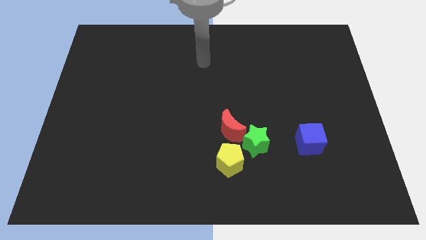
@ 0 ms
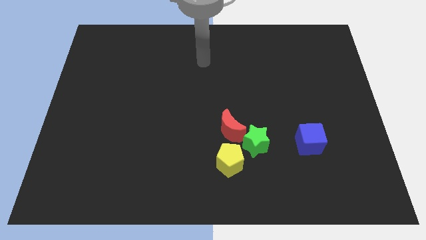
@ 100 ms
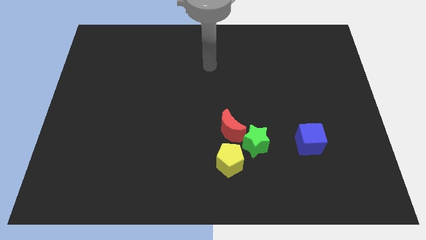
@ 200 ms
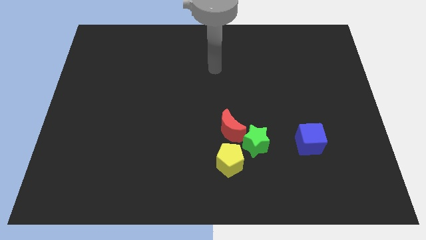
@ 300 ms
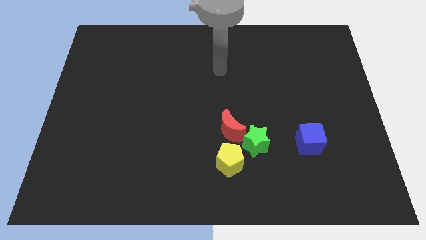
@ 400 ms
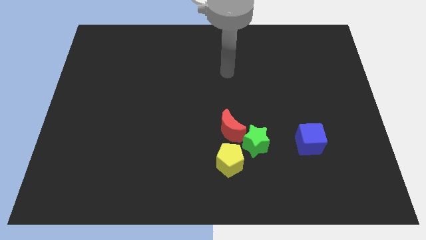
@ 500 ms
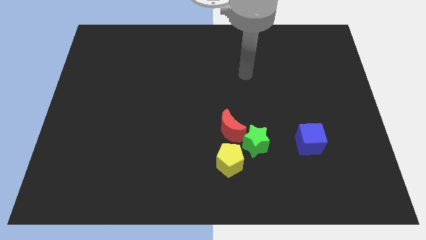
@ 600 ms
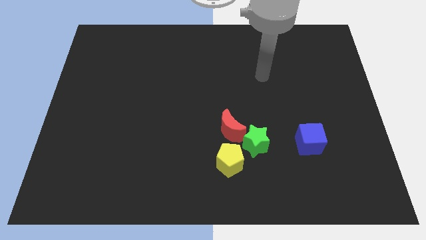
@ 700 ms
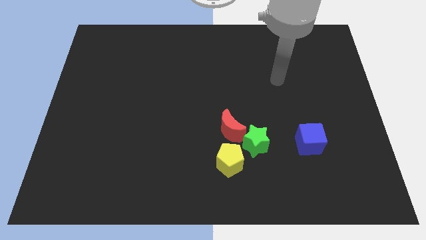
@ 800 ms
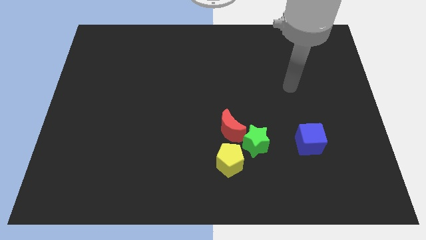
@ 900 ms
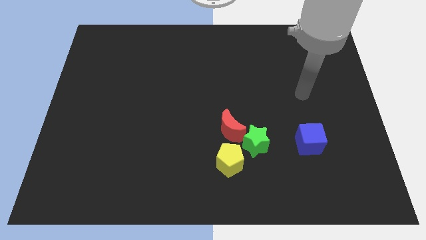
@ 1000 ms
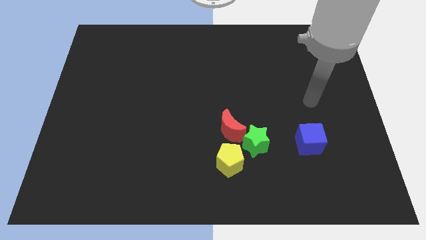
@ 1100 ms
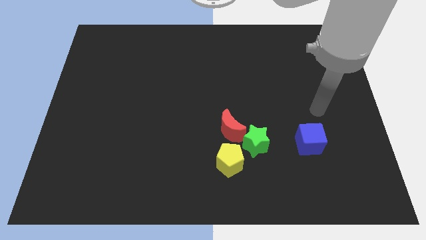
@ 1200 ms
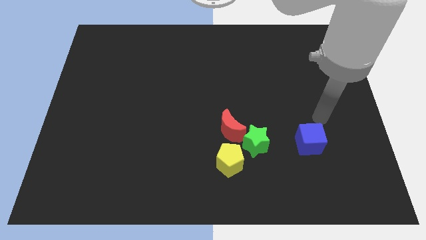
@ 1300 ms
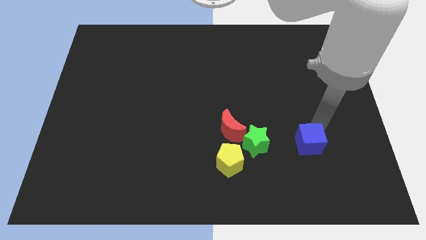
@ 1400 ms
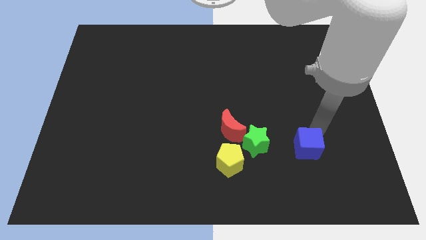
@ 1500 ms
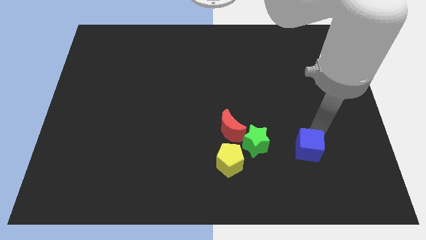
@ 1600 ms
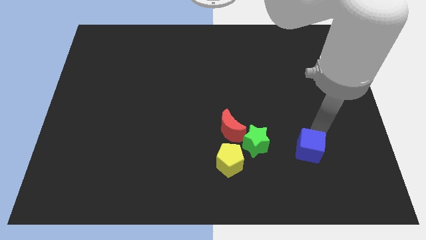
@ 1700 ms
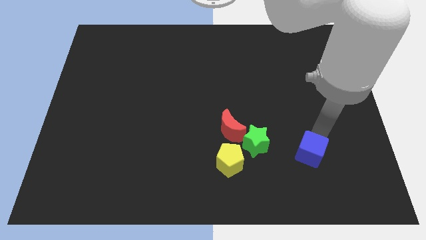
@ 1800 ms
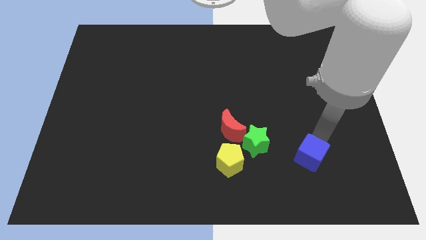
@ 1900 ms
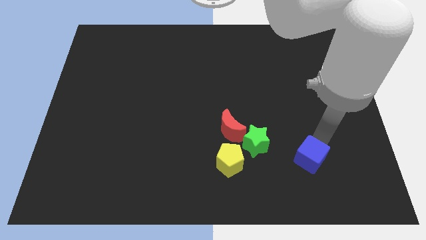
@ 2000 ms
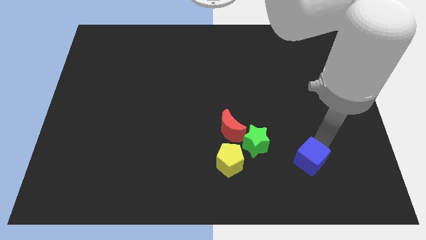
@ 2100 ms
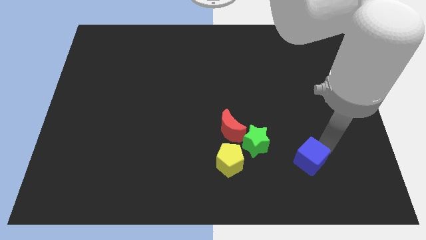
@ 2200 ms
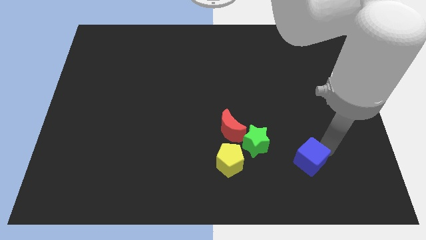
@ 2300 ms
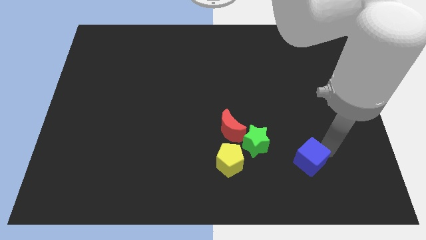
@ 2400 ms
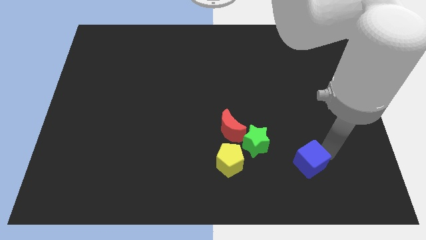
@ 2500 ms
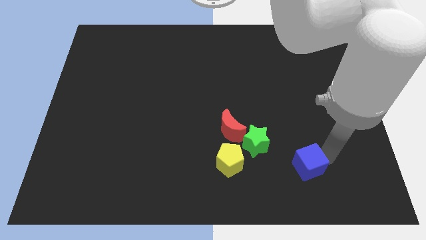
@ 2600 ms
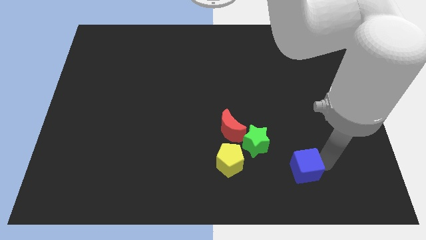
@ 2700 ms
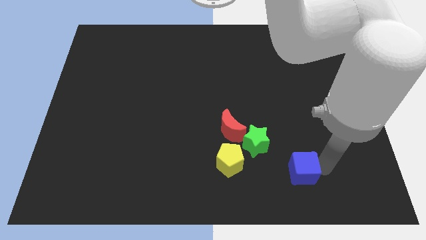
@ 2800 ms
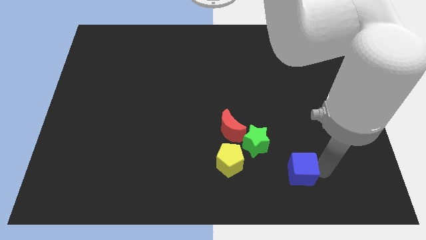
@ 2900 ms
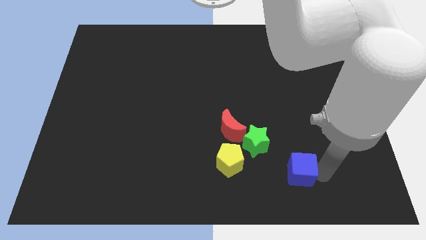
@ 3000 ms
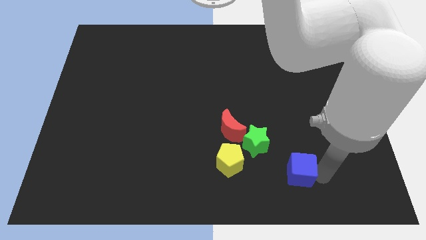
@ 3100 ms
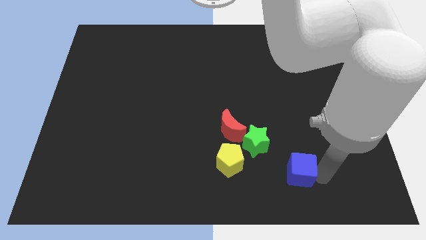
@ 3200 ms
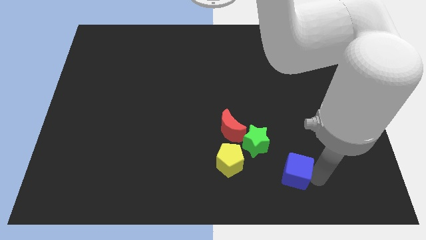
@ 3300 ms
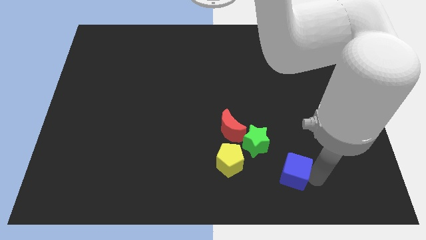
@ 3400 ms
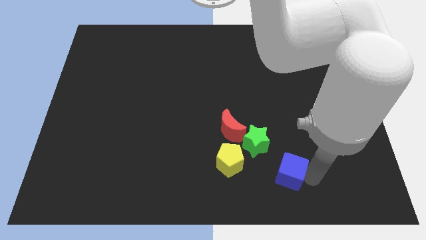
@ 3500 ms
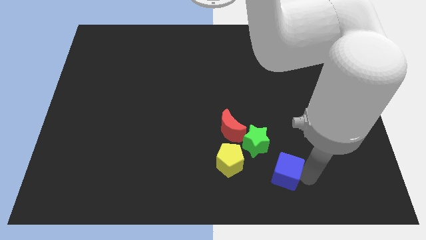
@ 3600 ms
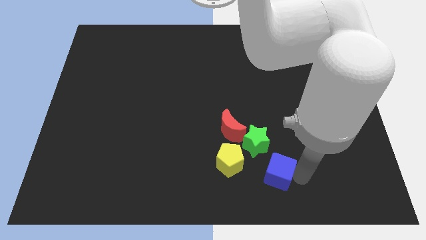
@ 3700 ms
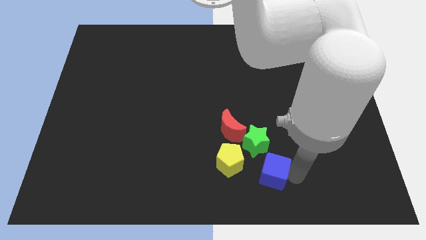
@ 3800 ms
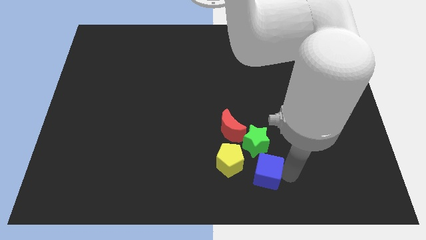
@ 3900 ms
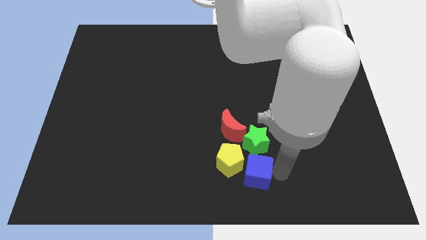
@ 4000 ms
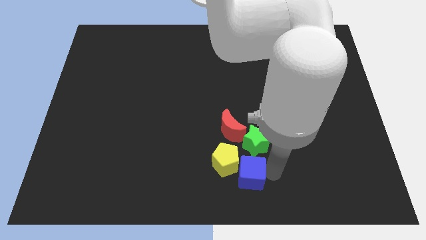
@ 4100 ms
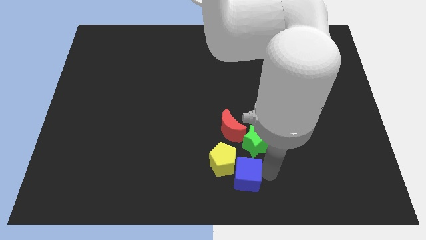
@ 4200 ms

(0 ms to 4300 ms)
slide the cube close to the pentagon

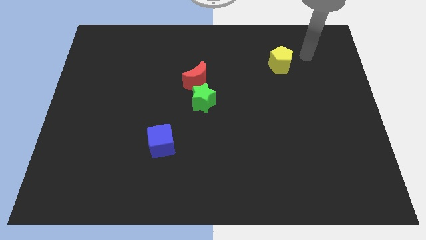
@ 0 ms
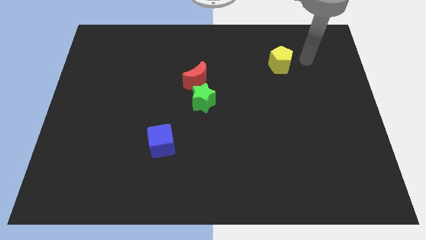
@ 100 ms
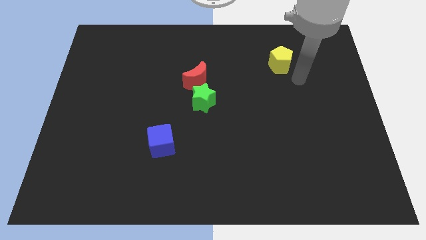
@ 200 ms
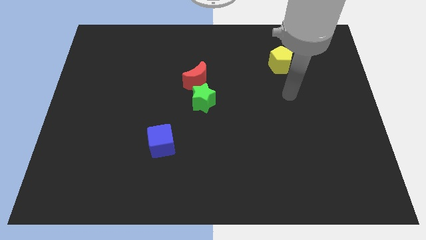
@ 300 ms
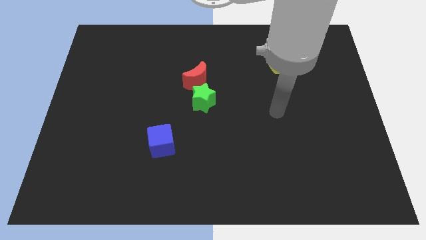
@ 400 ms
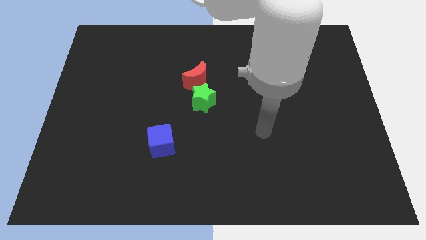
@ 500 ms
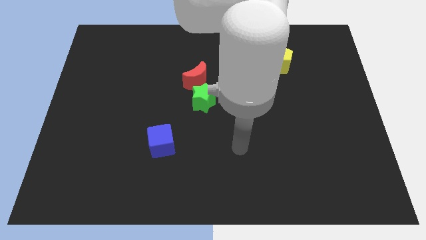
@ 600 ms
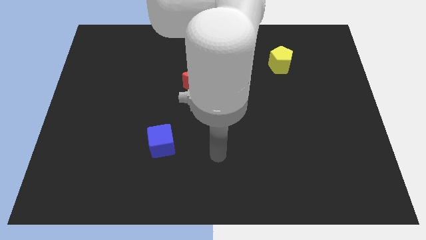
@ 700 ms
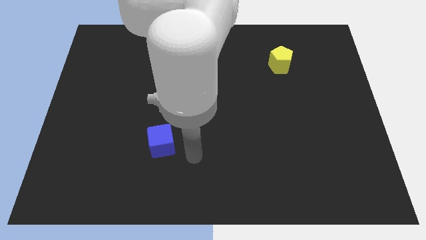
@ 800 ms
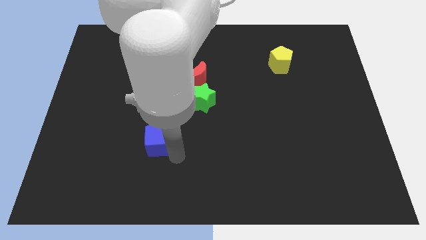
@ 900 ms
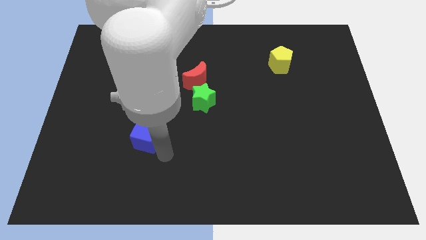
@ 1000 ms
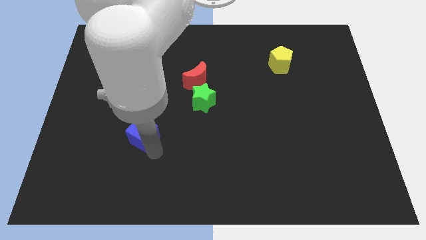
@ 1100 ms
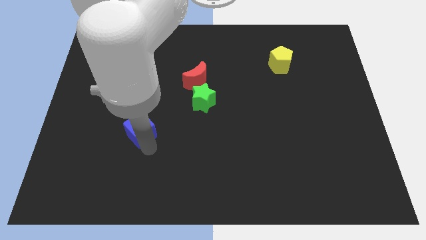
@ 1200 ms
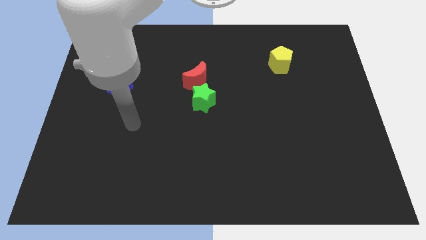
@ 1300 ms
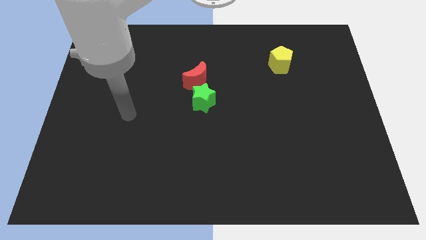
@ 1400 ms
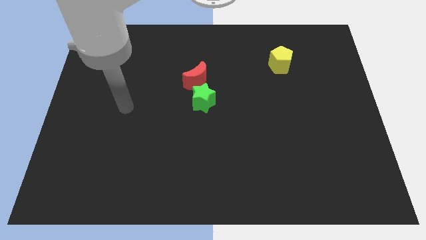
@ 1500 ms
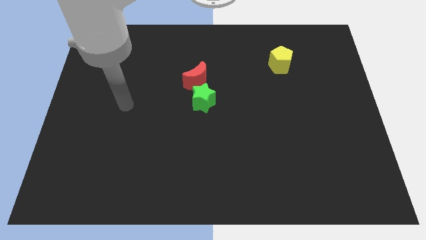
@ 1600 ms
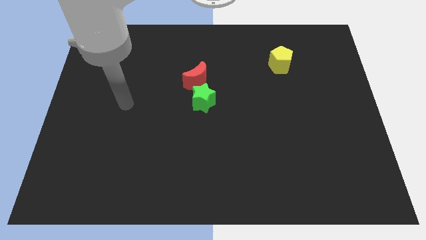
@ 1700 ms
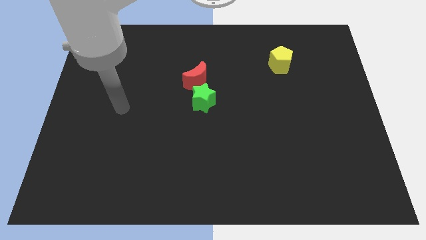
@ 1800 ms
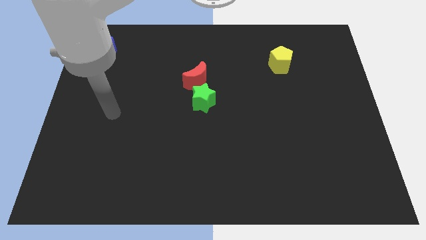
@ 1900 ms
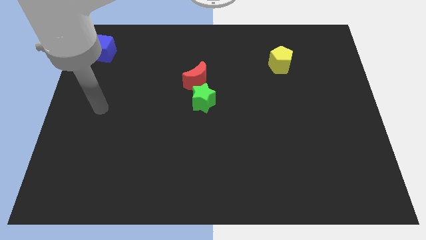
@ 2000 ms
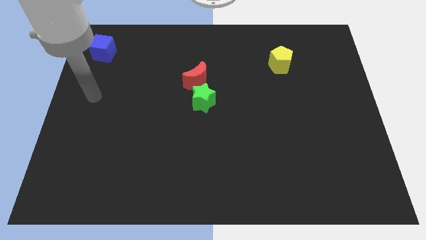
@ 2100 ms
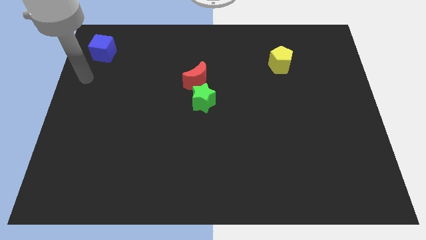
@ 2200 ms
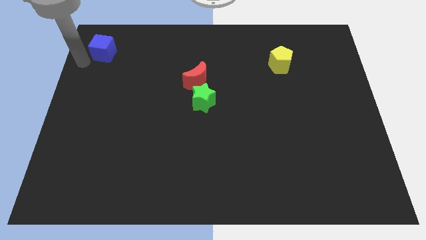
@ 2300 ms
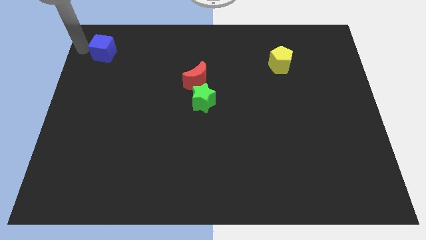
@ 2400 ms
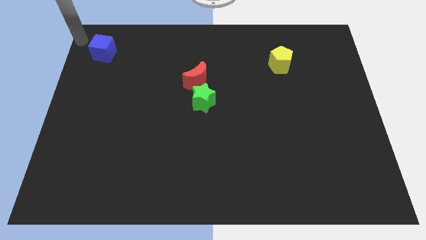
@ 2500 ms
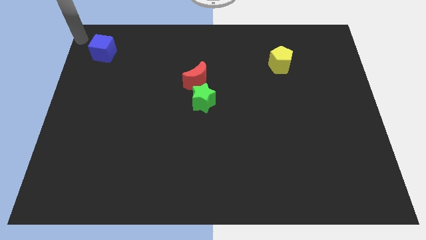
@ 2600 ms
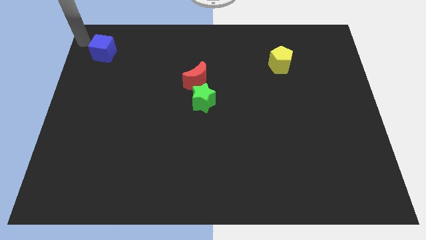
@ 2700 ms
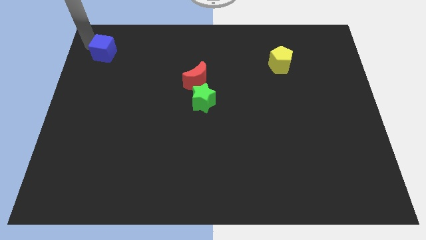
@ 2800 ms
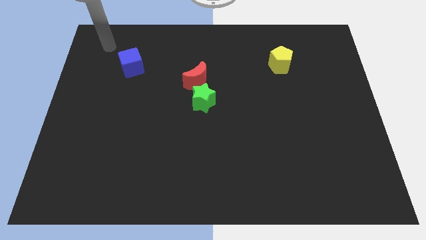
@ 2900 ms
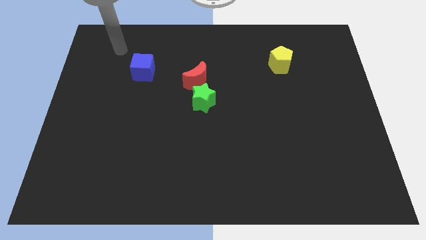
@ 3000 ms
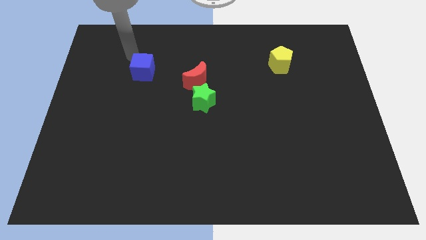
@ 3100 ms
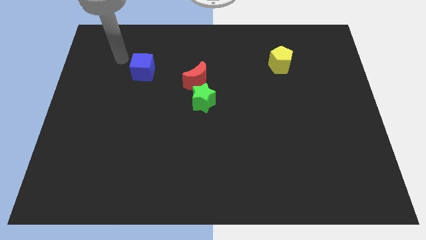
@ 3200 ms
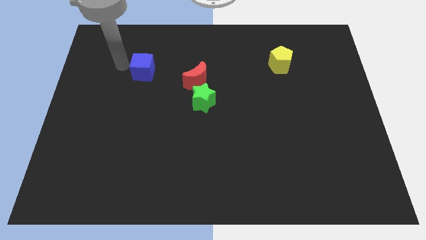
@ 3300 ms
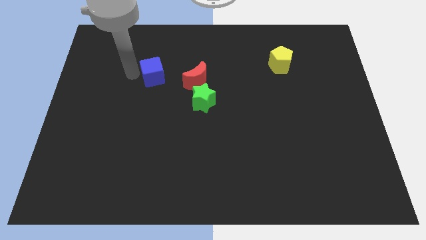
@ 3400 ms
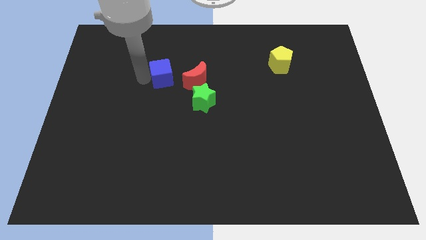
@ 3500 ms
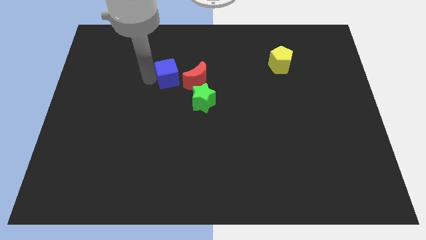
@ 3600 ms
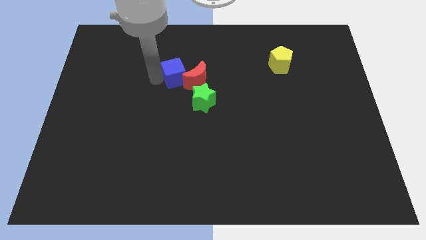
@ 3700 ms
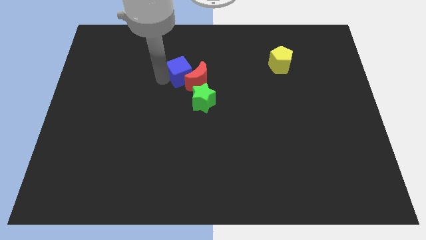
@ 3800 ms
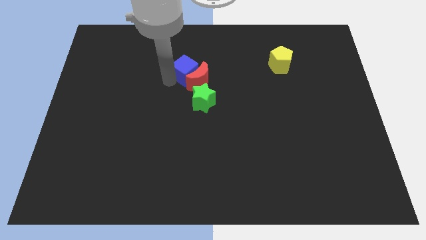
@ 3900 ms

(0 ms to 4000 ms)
put the cube close to the red block

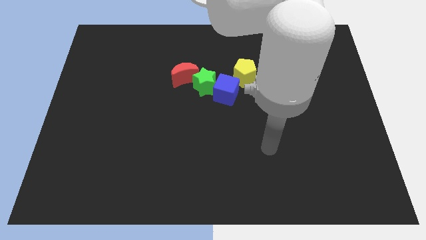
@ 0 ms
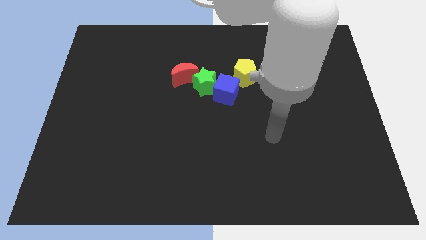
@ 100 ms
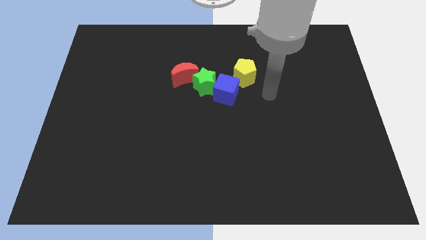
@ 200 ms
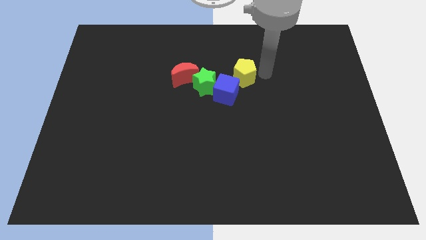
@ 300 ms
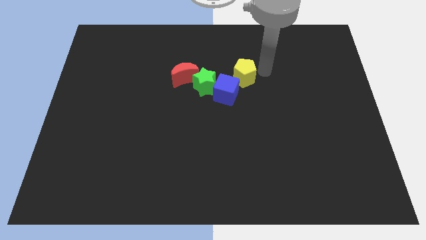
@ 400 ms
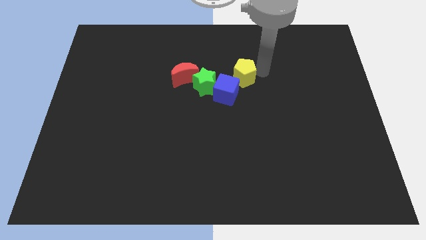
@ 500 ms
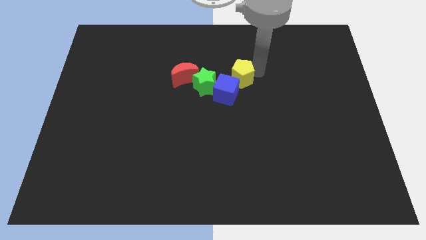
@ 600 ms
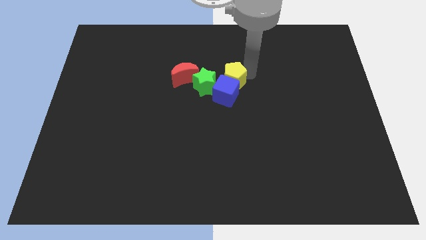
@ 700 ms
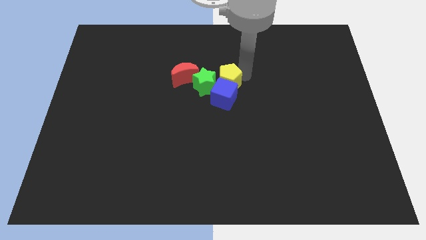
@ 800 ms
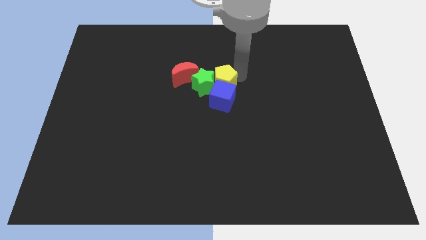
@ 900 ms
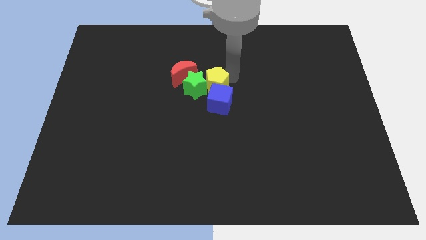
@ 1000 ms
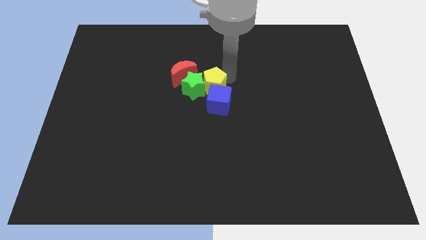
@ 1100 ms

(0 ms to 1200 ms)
slide the yellow block close to the green star
